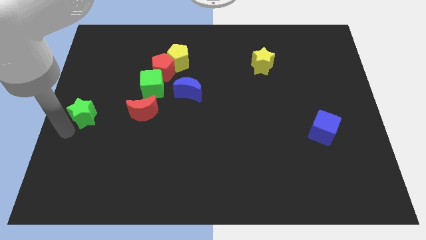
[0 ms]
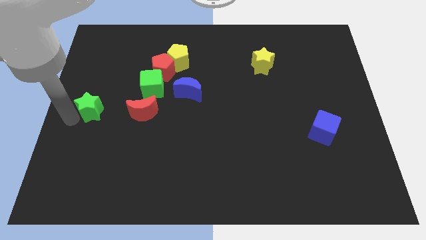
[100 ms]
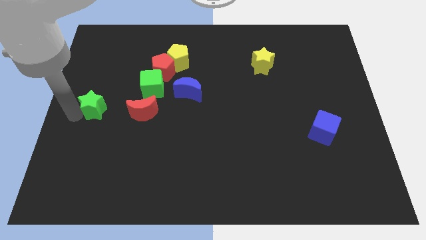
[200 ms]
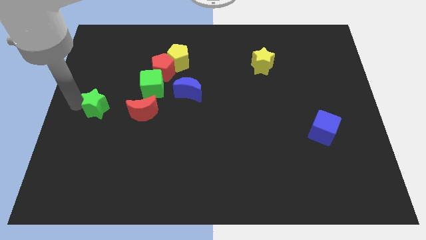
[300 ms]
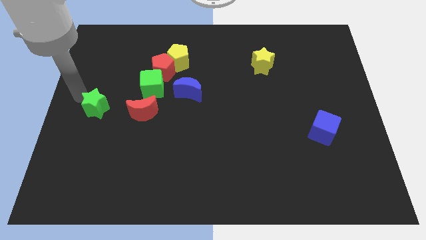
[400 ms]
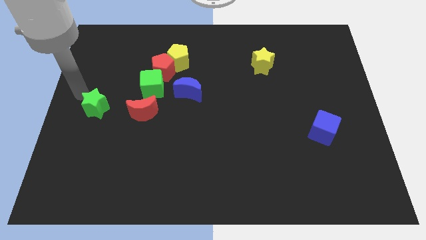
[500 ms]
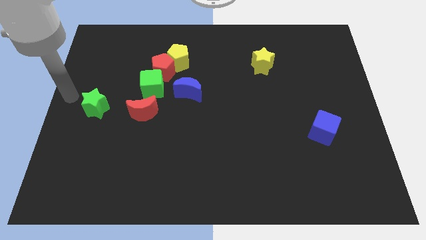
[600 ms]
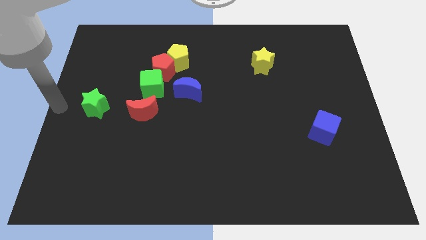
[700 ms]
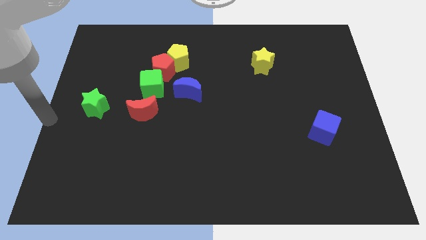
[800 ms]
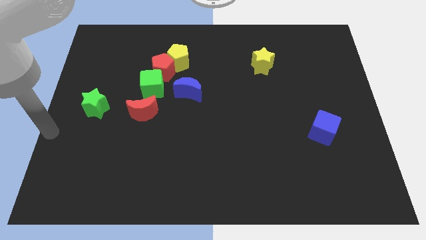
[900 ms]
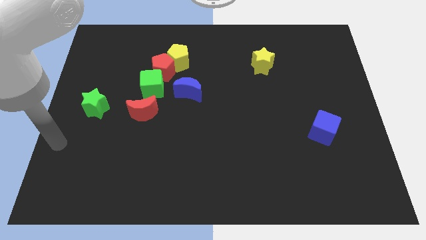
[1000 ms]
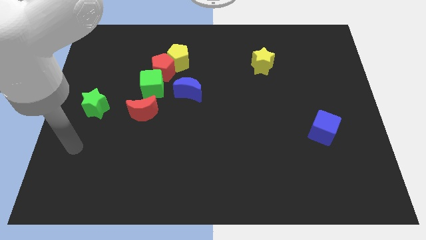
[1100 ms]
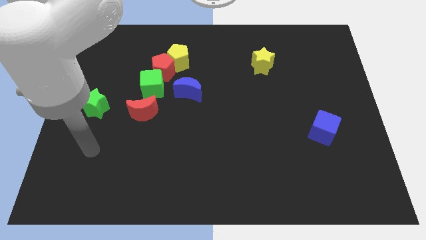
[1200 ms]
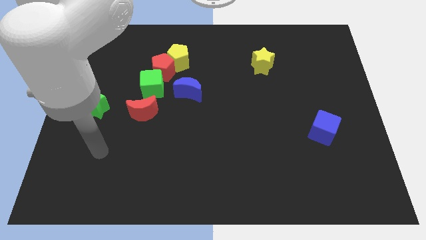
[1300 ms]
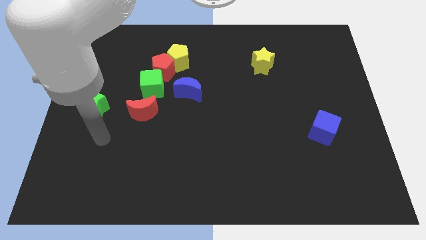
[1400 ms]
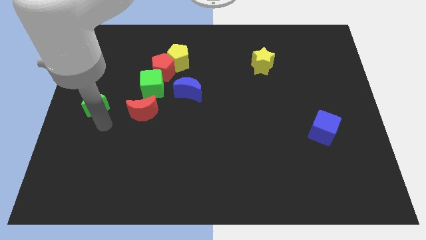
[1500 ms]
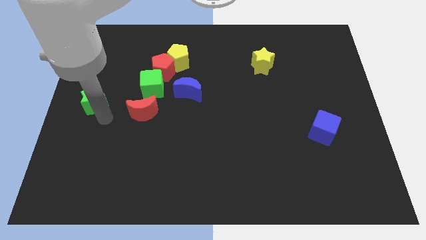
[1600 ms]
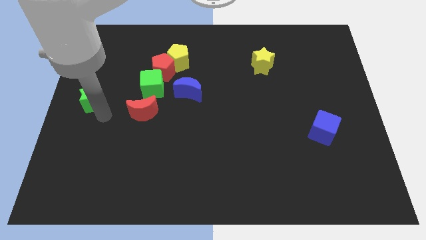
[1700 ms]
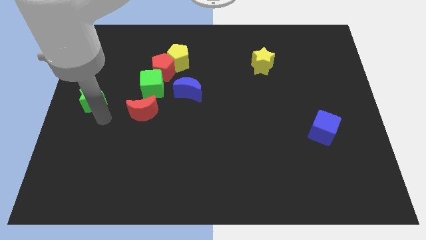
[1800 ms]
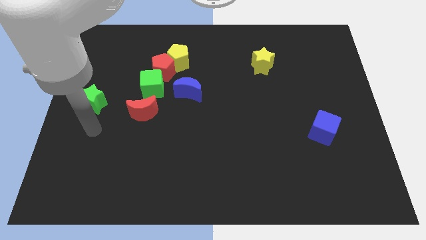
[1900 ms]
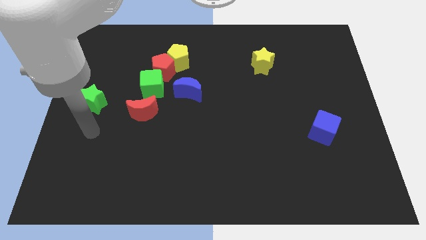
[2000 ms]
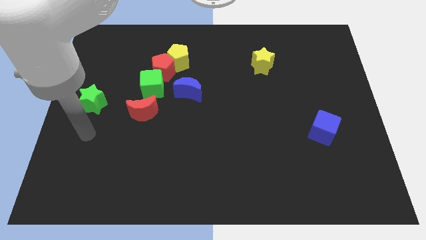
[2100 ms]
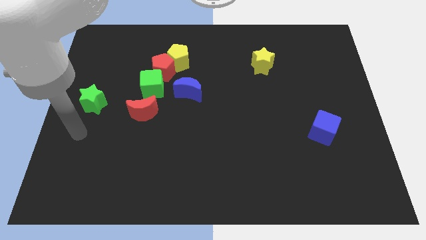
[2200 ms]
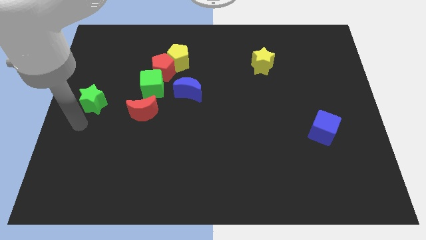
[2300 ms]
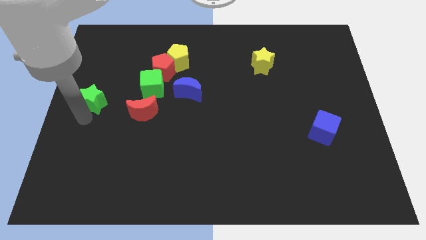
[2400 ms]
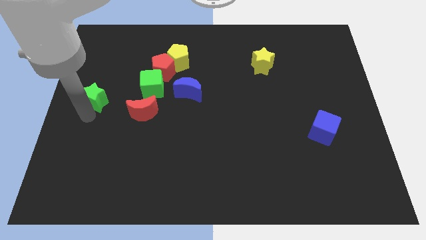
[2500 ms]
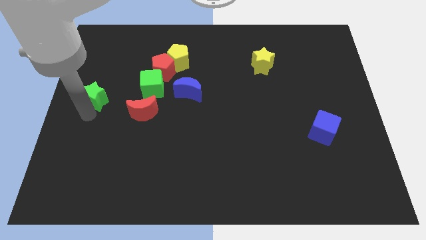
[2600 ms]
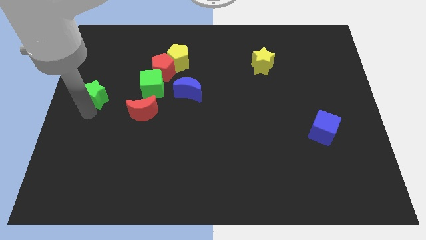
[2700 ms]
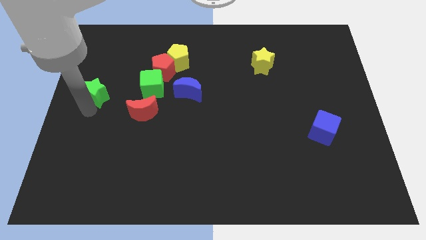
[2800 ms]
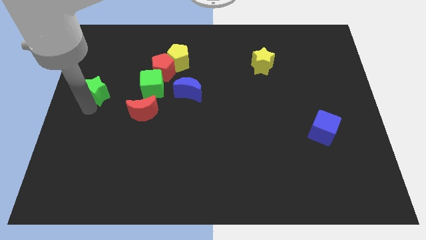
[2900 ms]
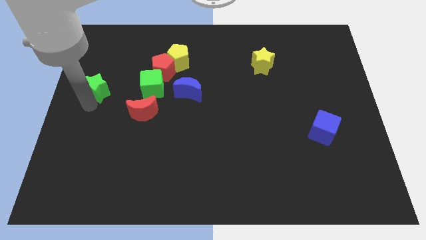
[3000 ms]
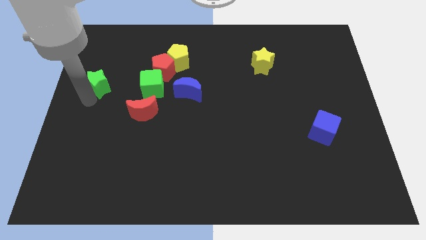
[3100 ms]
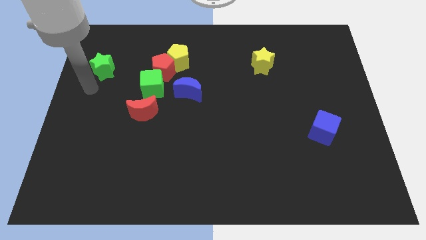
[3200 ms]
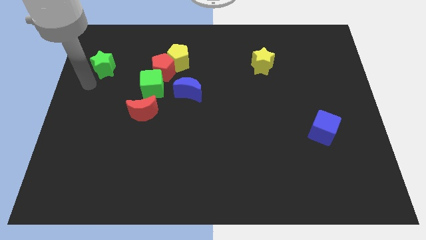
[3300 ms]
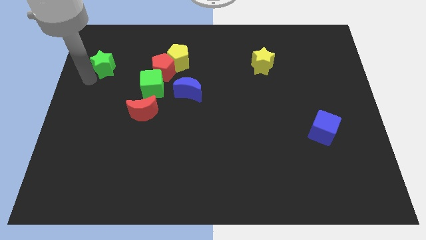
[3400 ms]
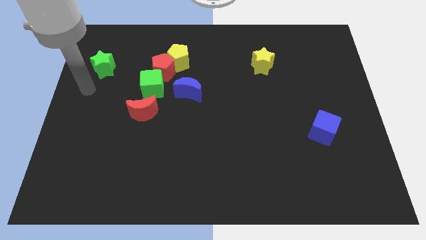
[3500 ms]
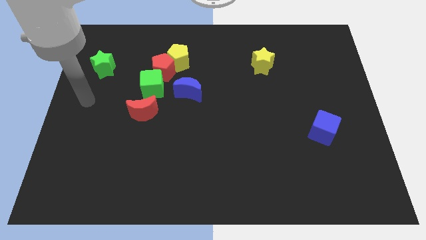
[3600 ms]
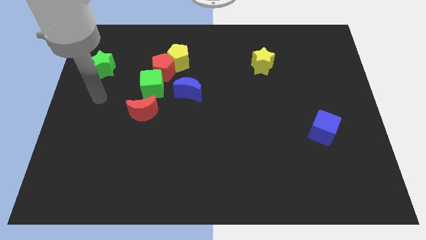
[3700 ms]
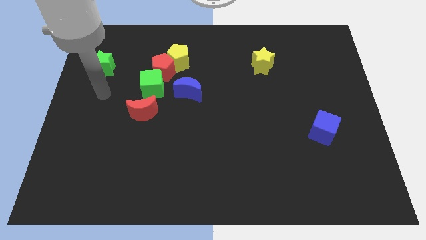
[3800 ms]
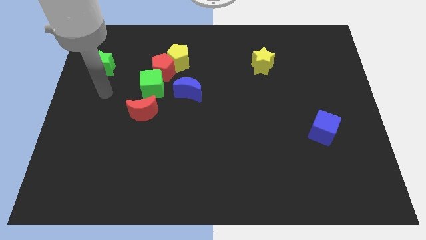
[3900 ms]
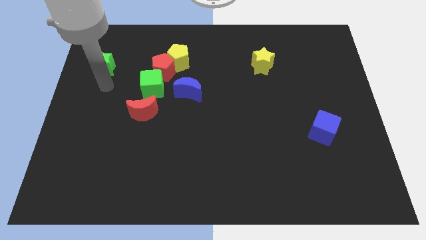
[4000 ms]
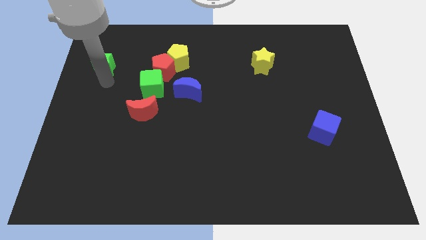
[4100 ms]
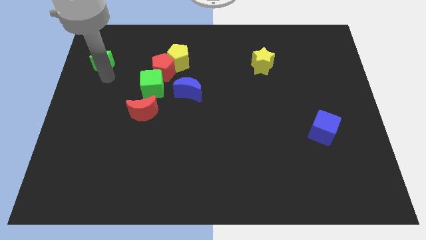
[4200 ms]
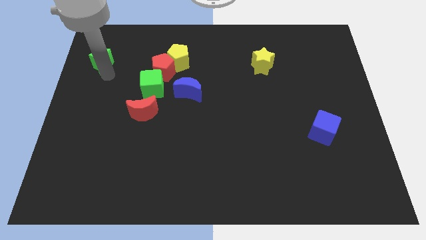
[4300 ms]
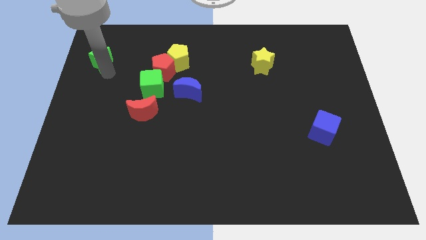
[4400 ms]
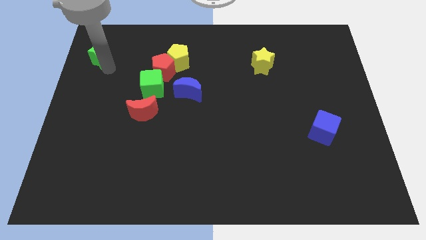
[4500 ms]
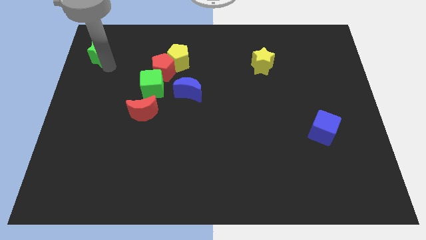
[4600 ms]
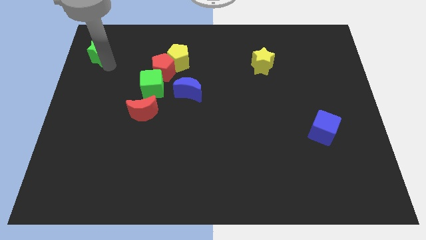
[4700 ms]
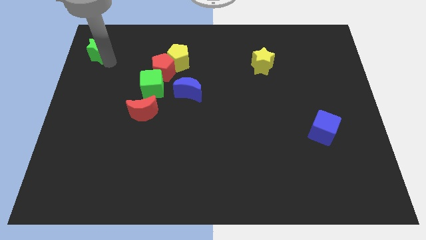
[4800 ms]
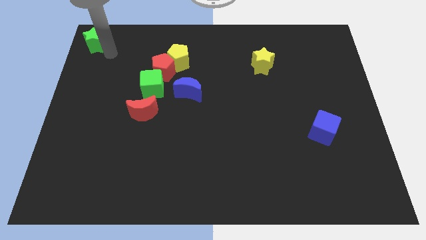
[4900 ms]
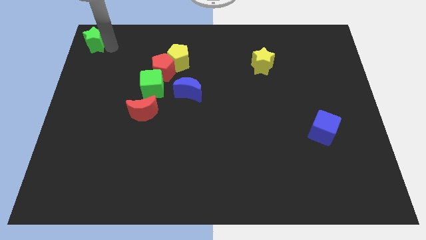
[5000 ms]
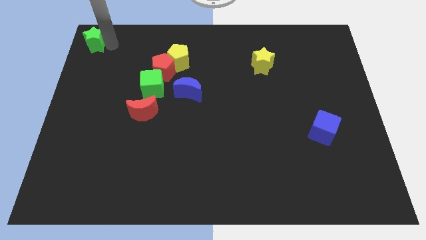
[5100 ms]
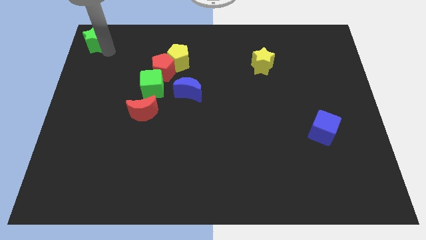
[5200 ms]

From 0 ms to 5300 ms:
push the green star towards the left top of the board

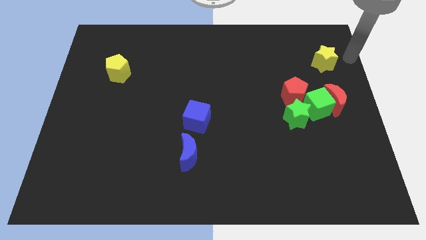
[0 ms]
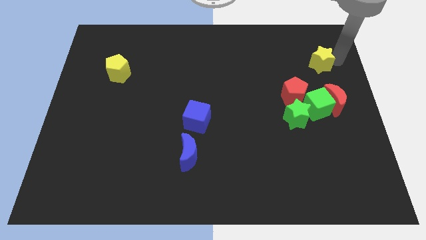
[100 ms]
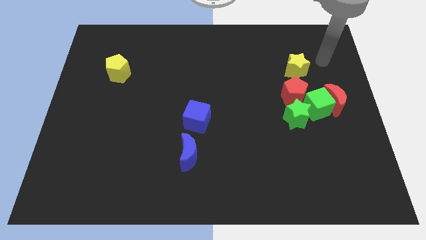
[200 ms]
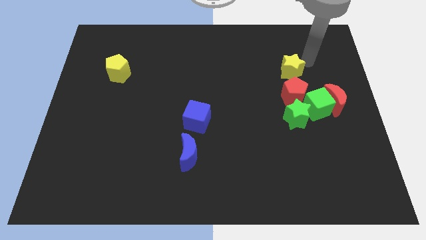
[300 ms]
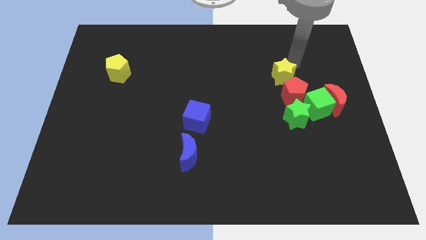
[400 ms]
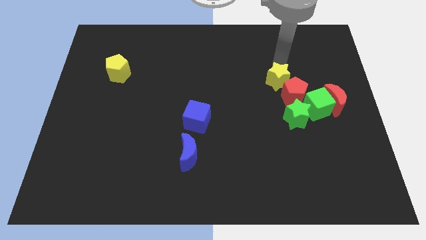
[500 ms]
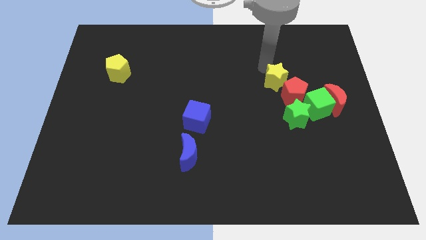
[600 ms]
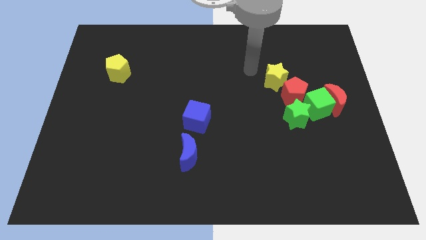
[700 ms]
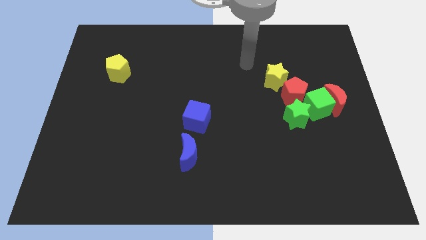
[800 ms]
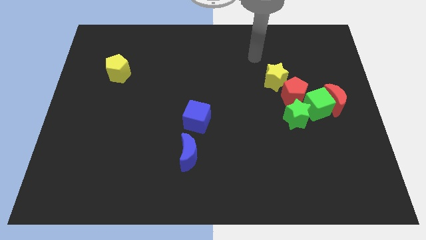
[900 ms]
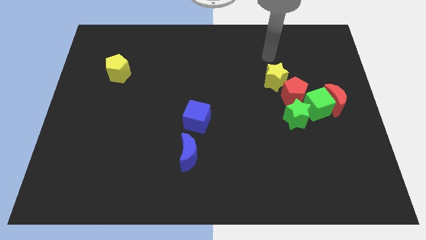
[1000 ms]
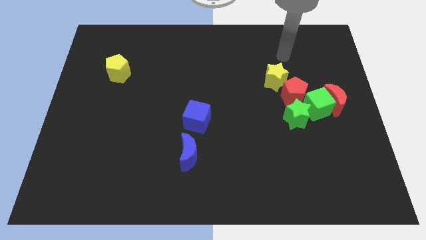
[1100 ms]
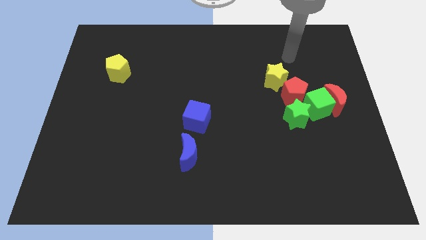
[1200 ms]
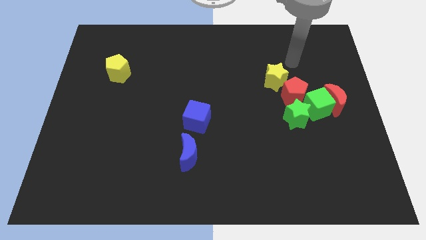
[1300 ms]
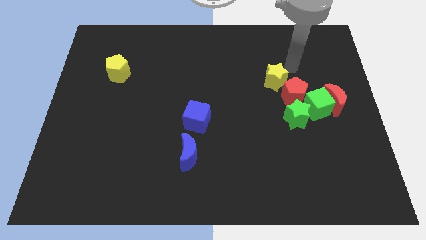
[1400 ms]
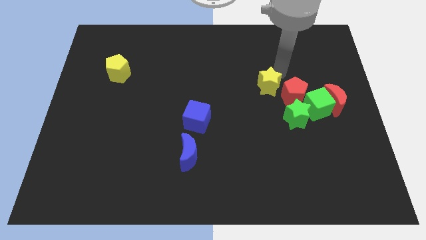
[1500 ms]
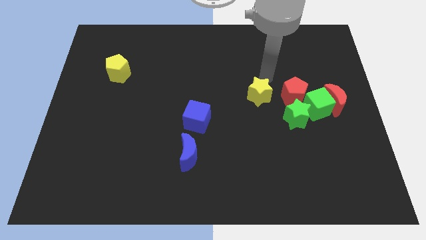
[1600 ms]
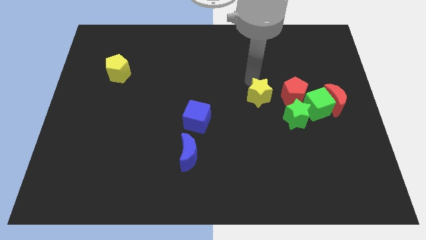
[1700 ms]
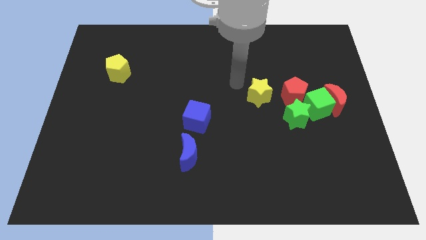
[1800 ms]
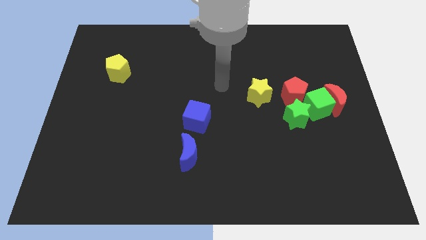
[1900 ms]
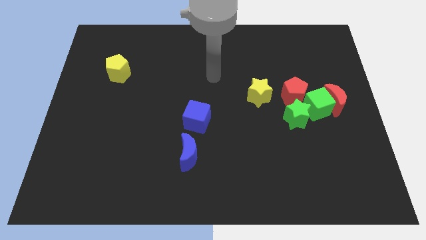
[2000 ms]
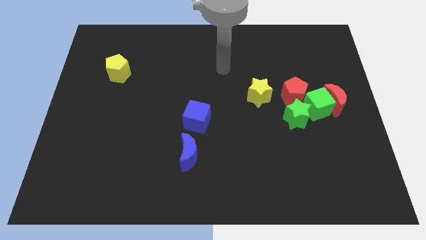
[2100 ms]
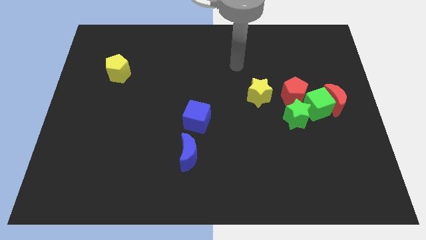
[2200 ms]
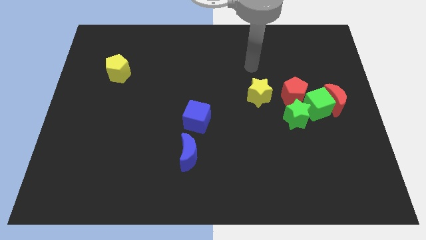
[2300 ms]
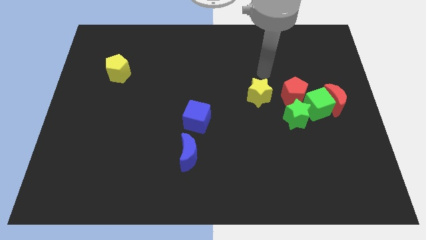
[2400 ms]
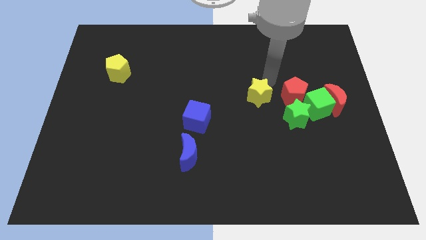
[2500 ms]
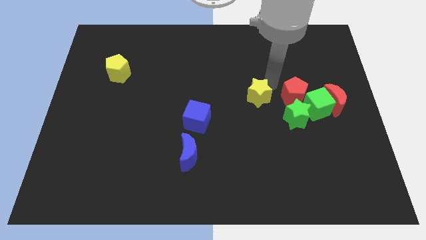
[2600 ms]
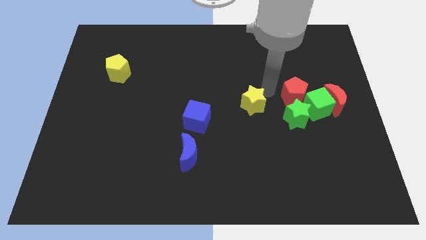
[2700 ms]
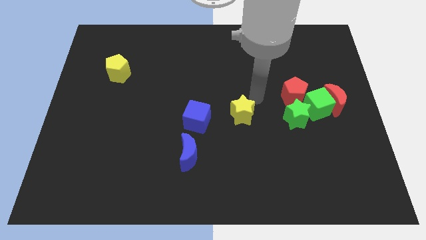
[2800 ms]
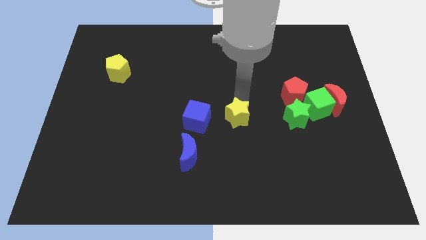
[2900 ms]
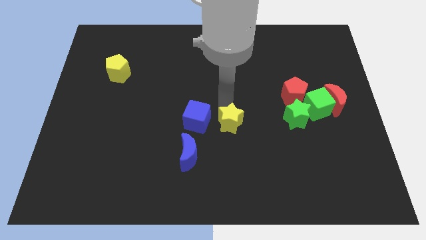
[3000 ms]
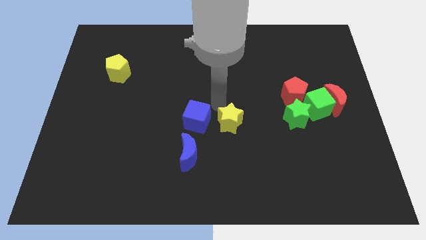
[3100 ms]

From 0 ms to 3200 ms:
place a yellow star beside blue cube

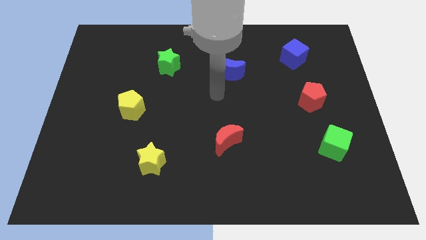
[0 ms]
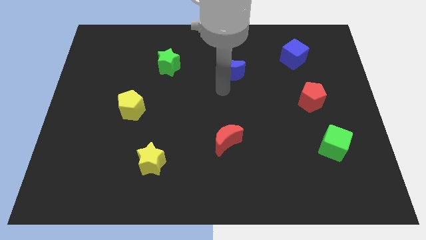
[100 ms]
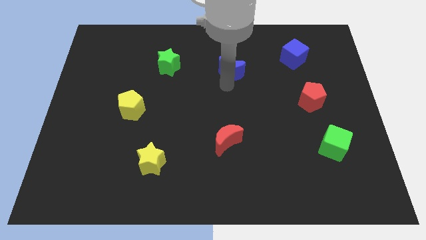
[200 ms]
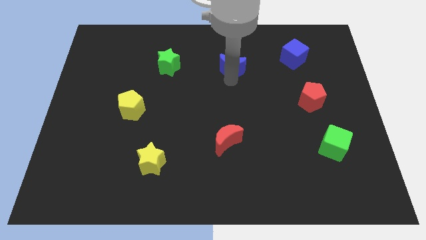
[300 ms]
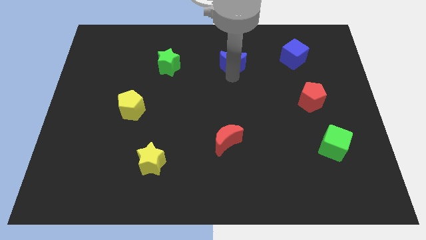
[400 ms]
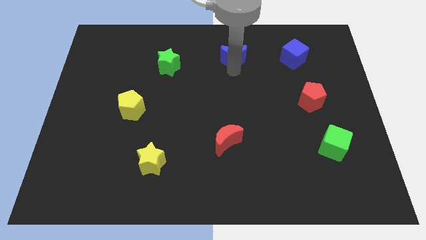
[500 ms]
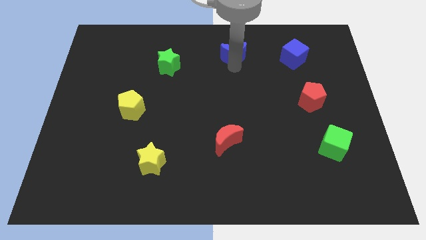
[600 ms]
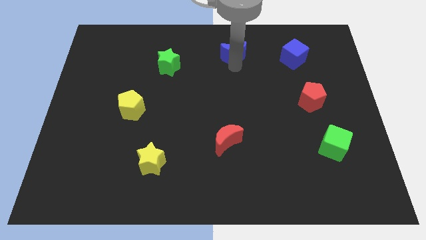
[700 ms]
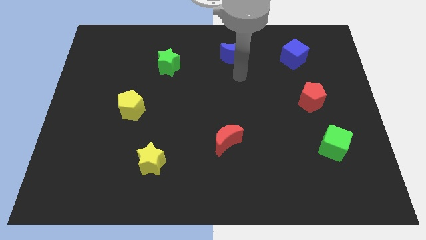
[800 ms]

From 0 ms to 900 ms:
push blue crescent slightly towards up
